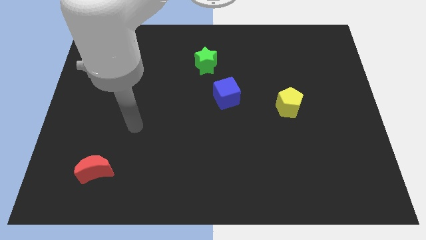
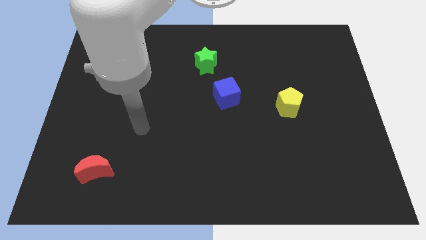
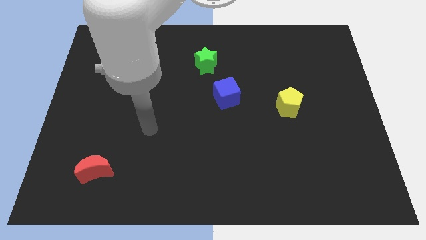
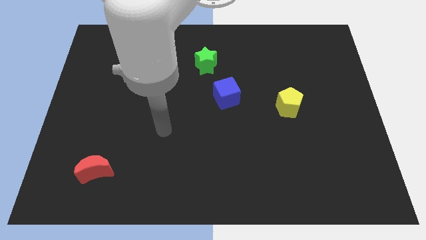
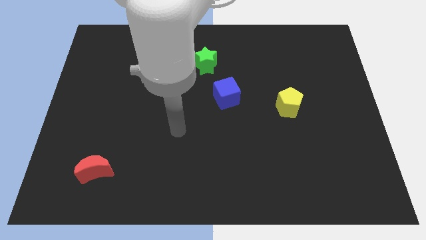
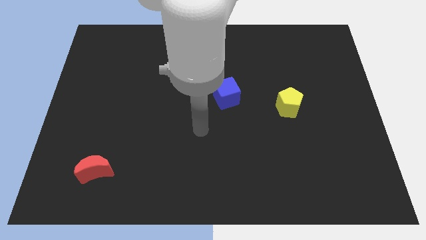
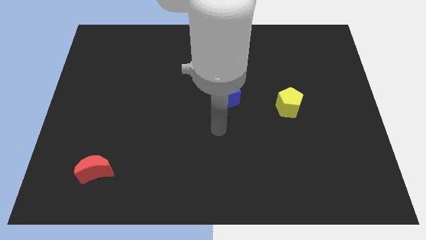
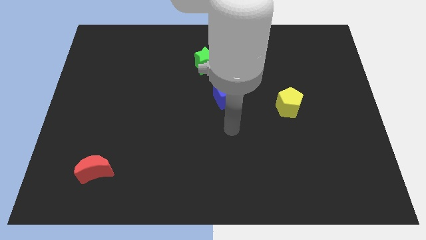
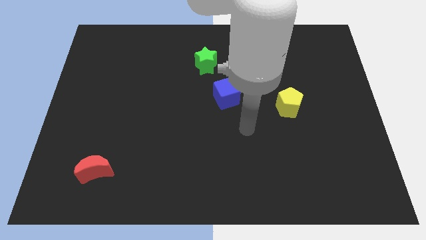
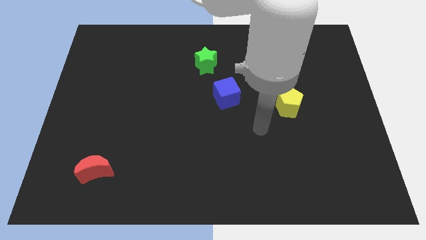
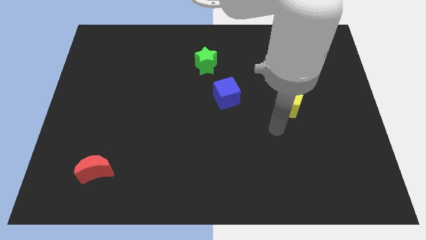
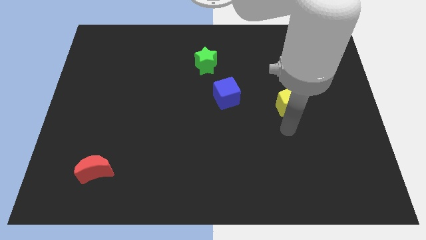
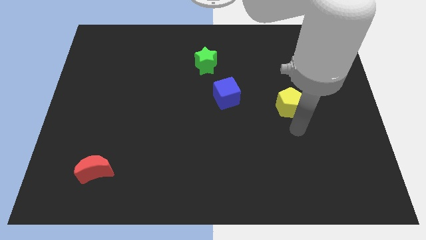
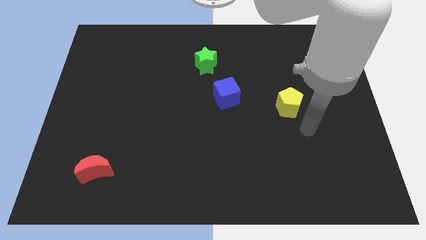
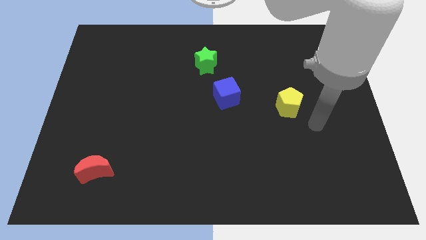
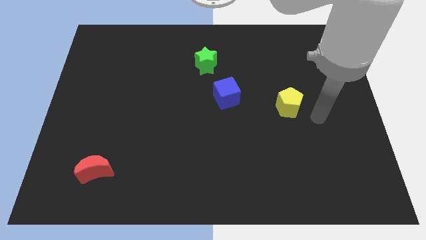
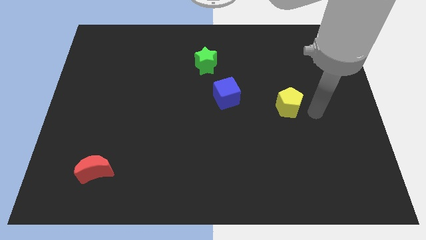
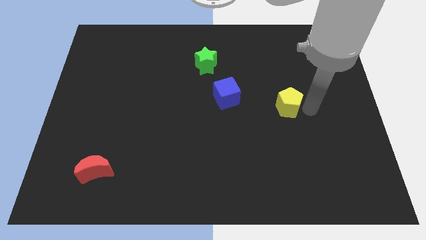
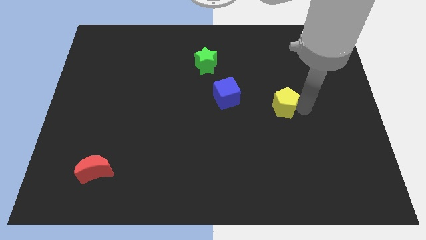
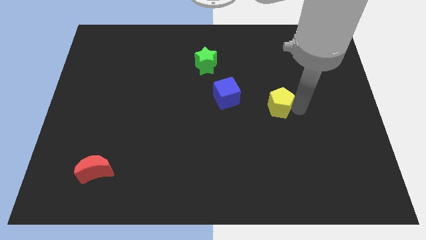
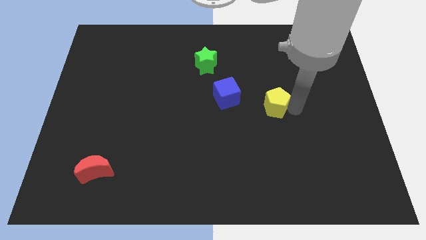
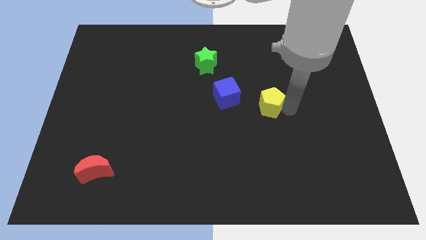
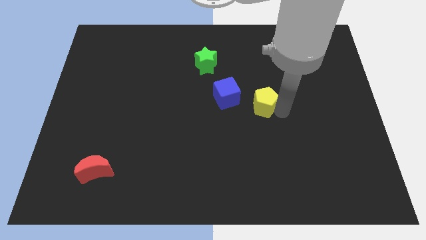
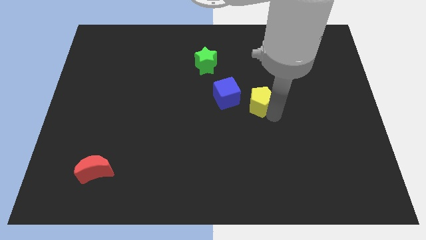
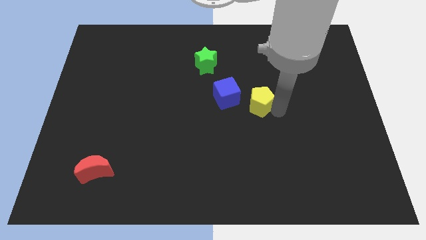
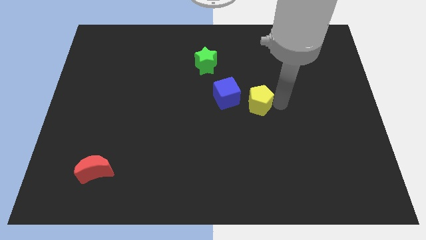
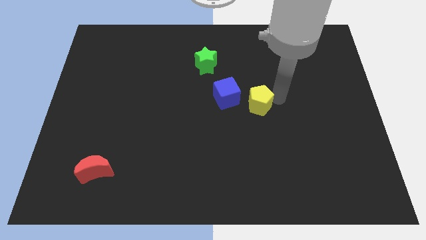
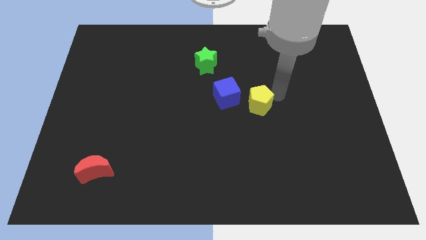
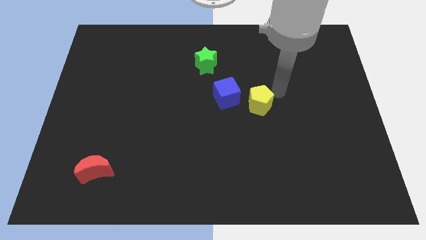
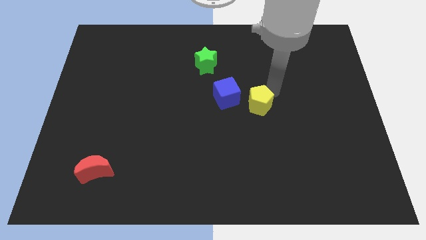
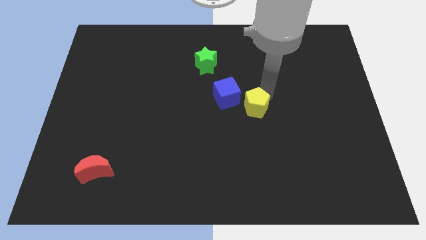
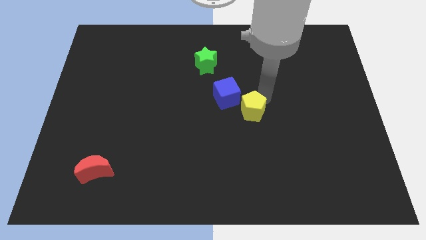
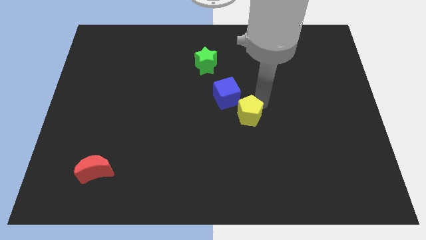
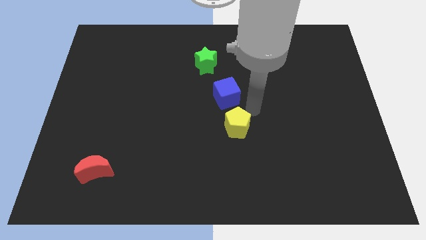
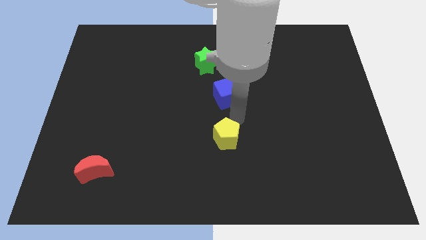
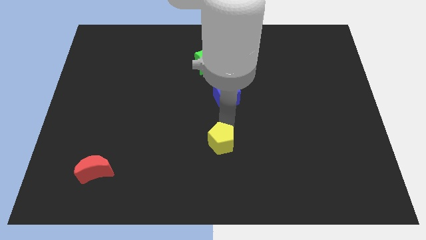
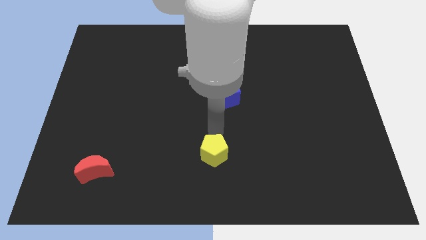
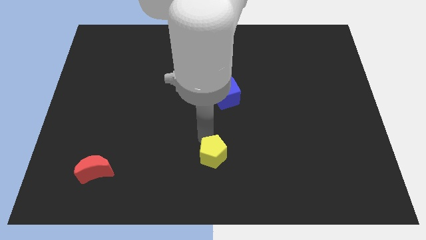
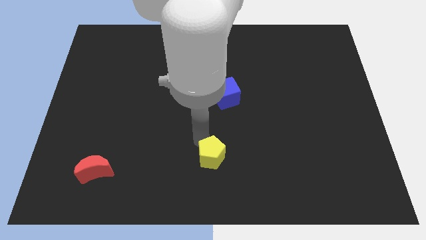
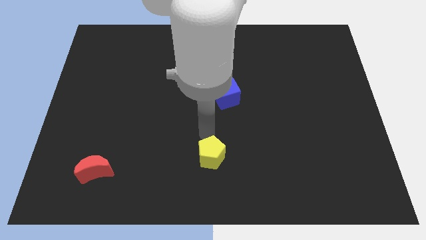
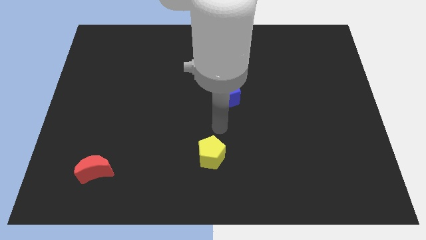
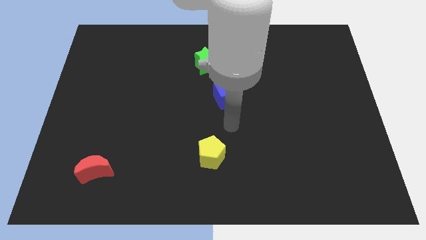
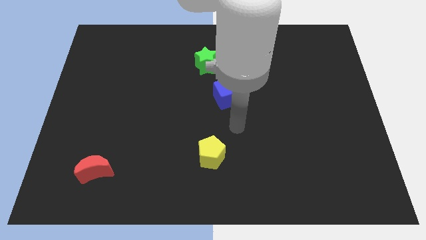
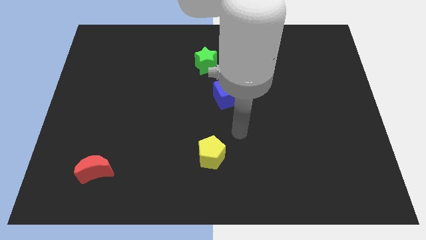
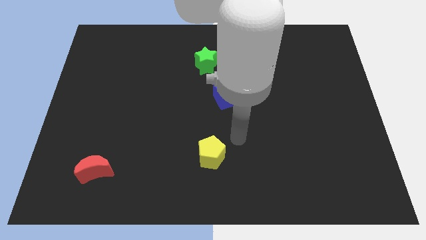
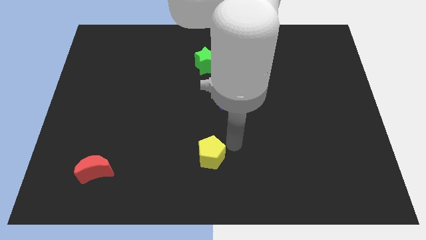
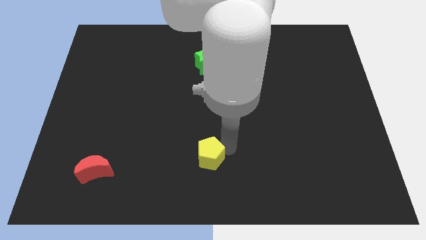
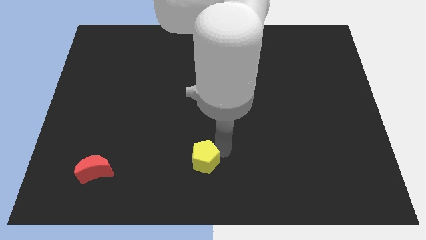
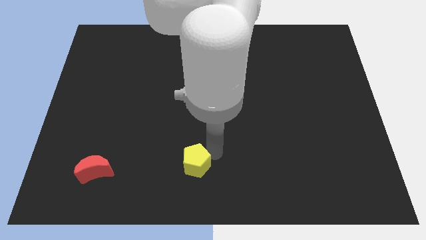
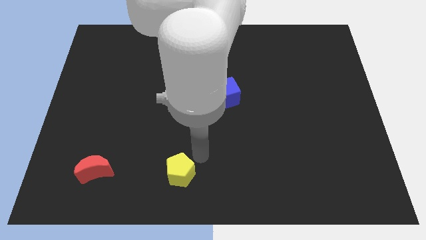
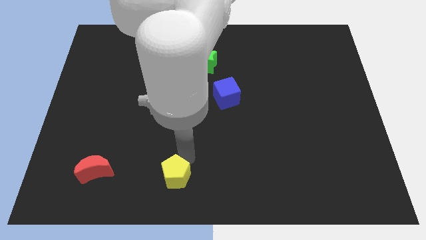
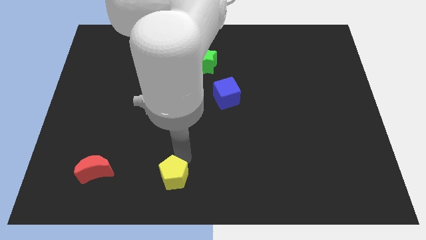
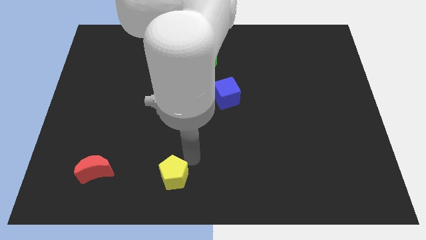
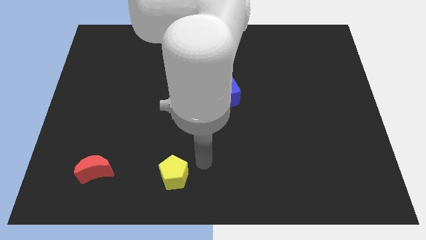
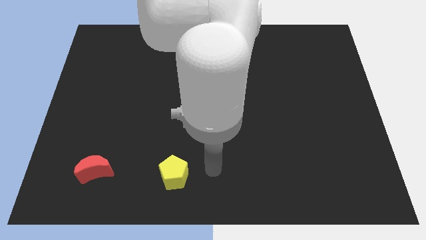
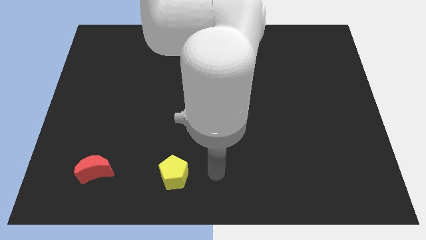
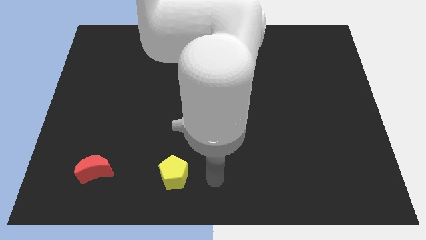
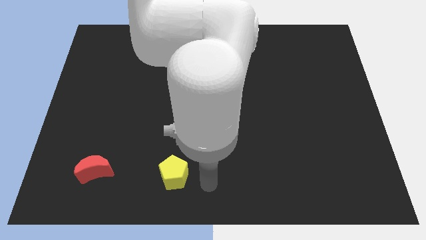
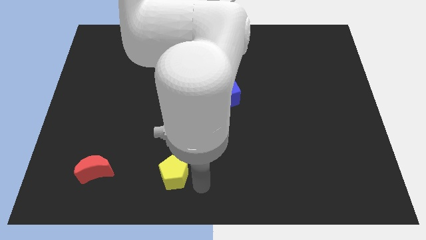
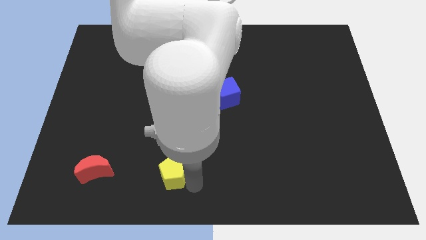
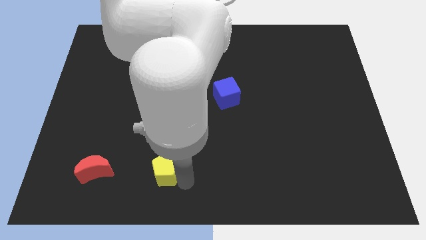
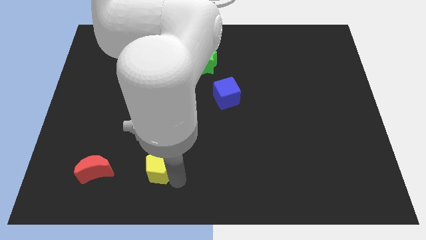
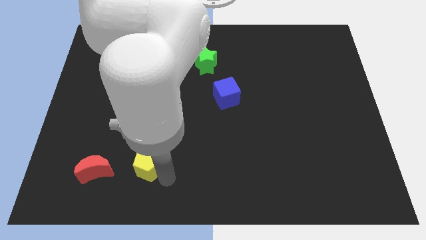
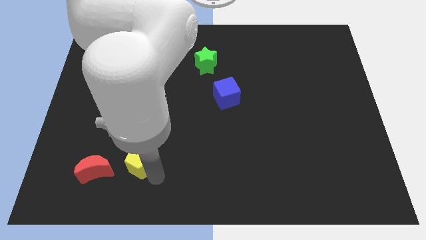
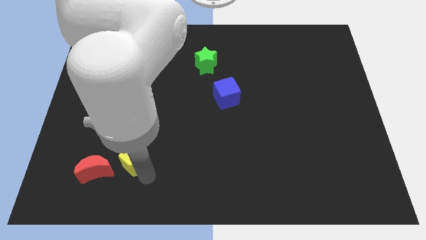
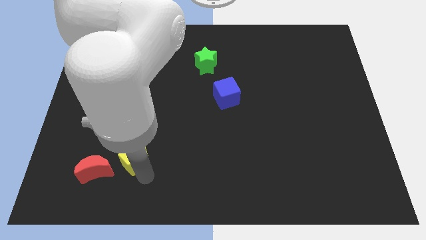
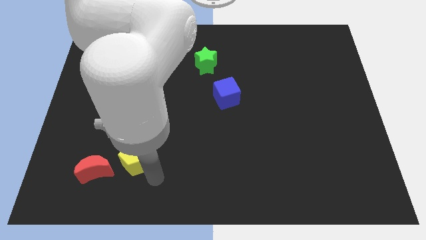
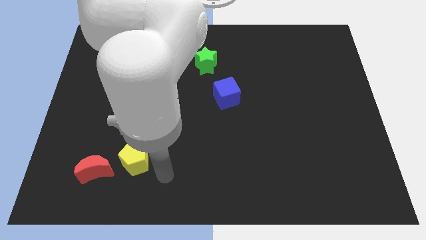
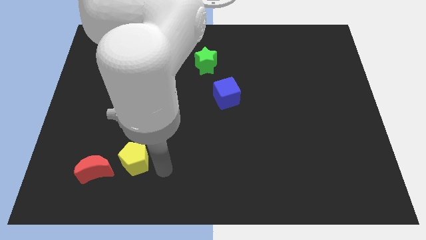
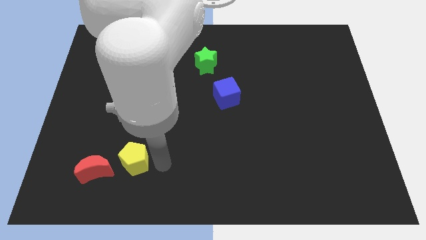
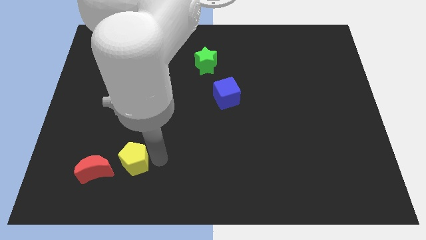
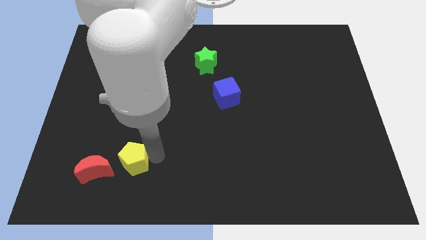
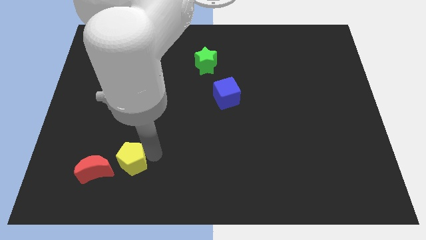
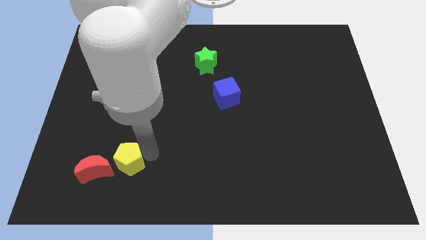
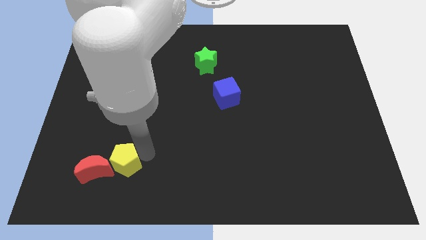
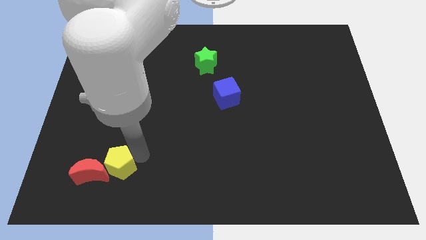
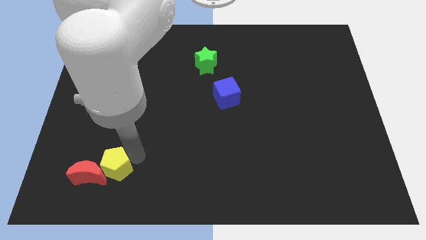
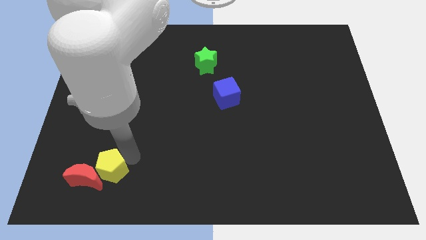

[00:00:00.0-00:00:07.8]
move the yellow block to the moon

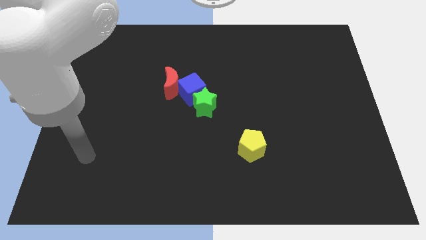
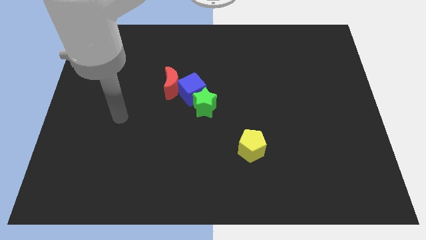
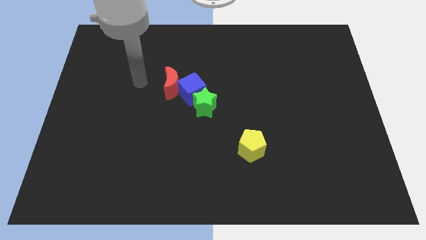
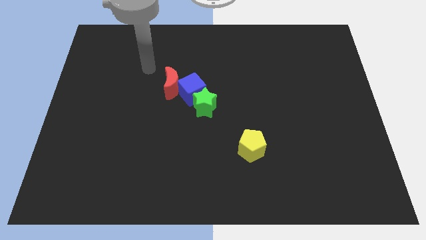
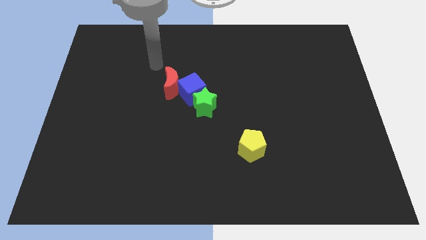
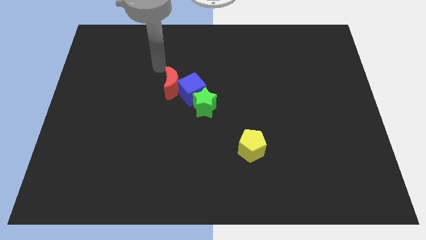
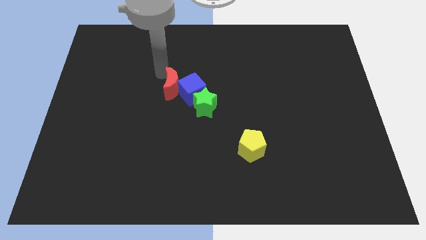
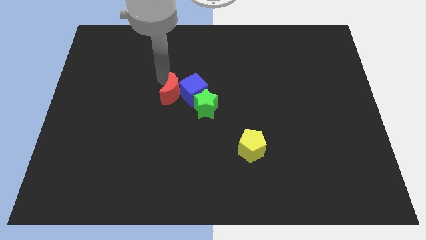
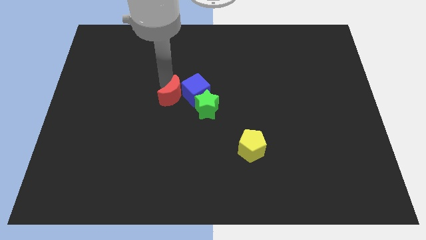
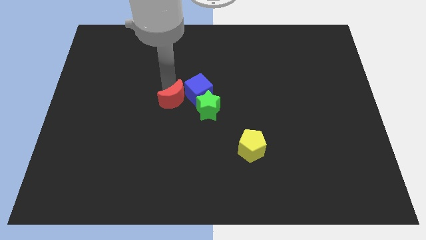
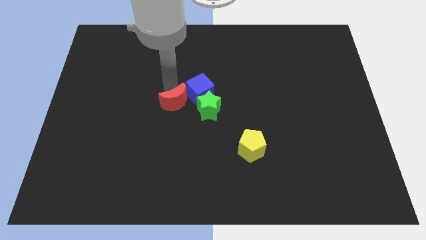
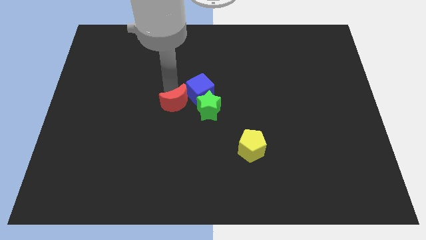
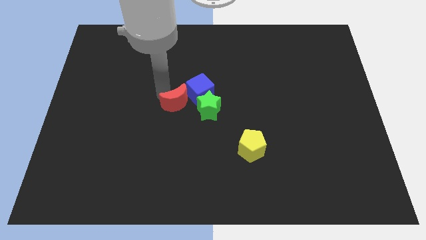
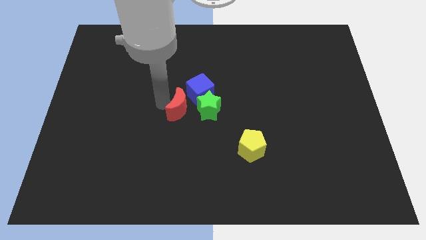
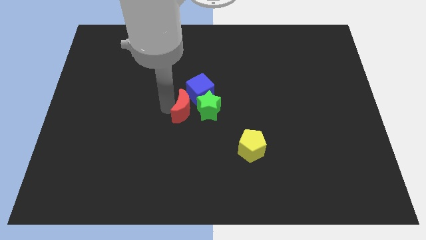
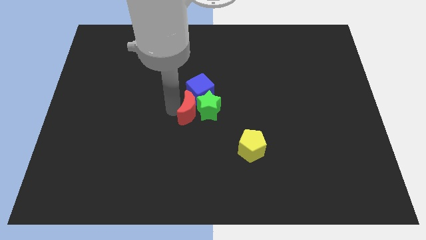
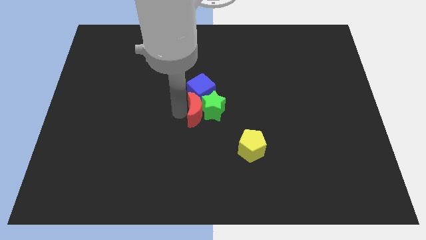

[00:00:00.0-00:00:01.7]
slide the red moon close to the green star
